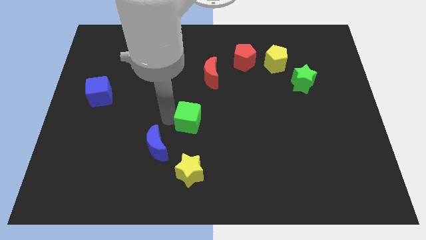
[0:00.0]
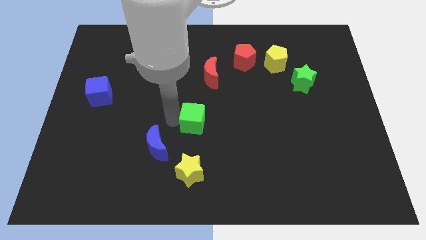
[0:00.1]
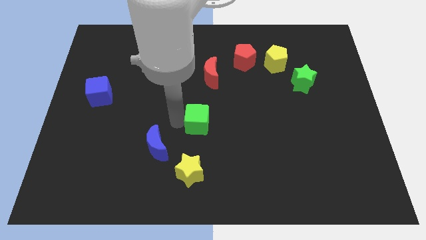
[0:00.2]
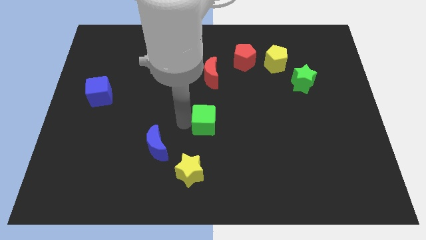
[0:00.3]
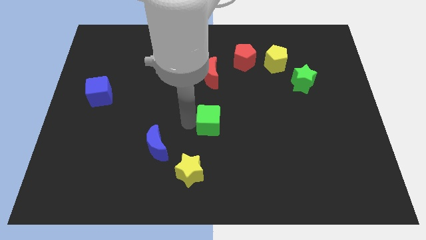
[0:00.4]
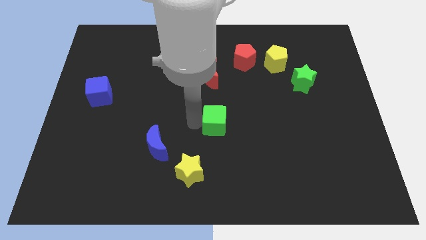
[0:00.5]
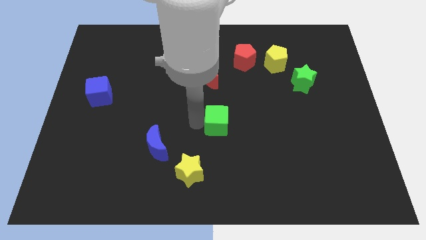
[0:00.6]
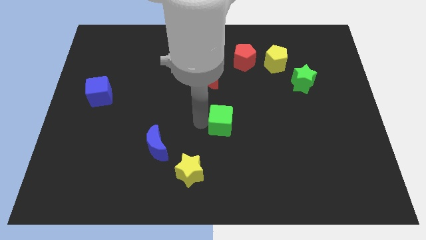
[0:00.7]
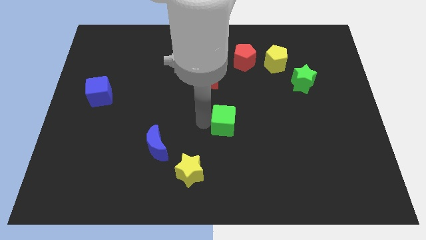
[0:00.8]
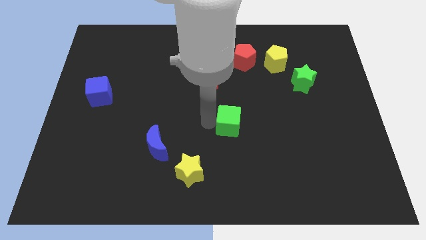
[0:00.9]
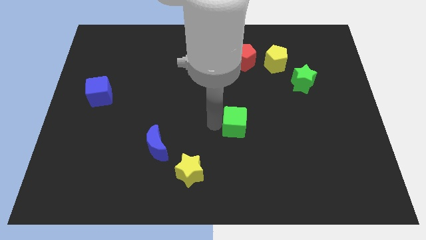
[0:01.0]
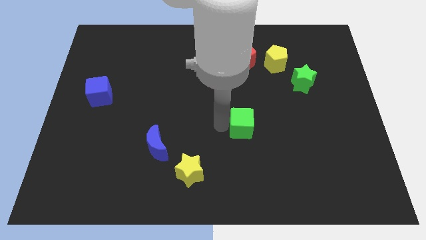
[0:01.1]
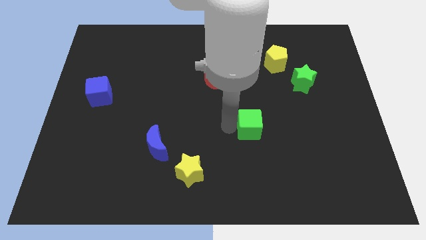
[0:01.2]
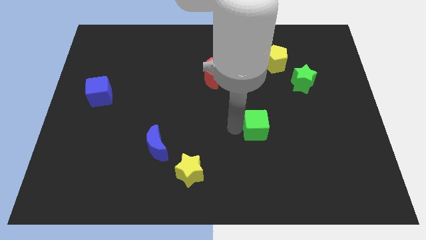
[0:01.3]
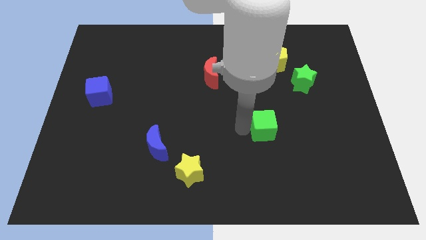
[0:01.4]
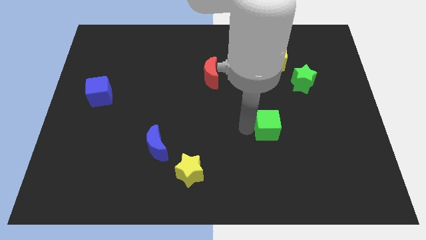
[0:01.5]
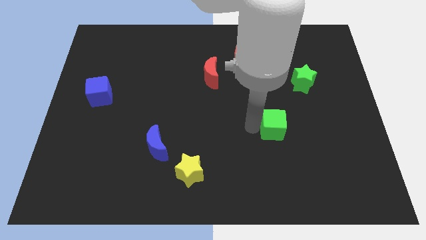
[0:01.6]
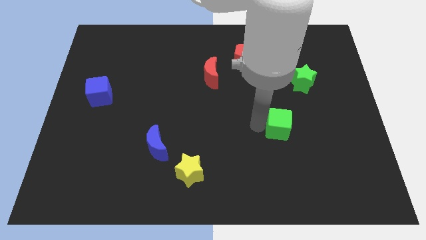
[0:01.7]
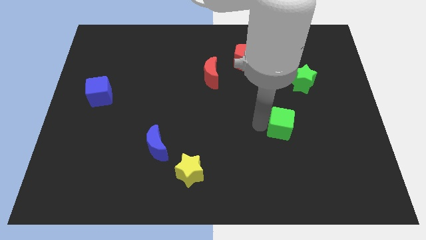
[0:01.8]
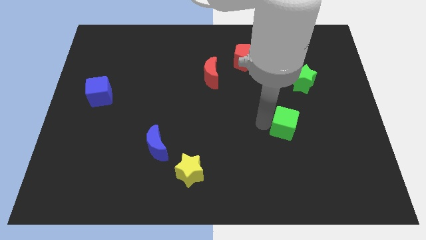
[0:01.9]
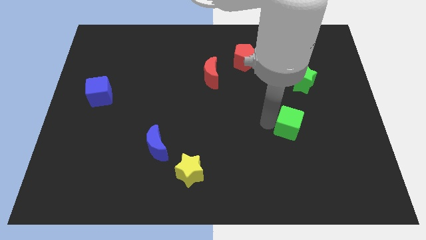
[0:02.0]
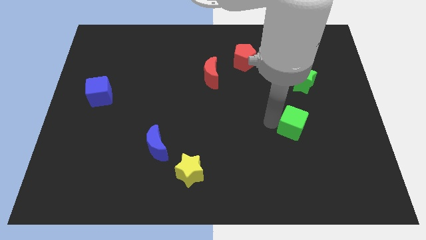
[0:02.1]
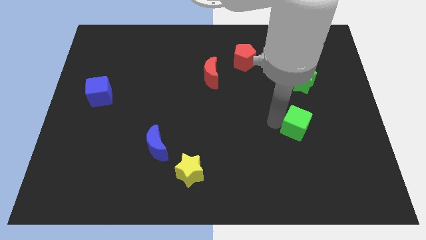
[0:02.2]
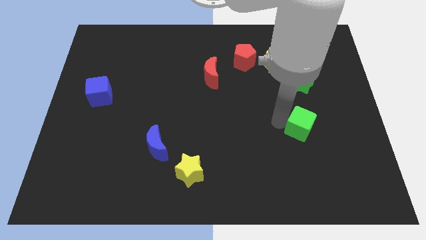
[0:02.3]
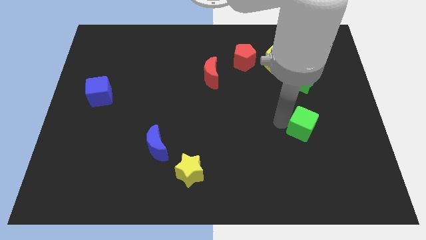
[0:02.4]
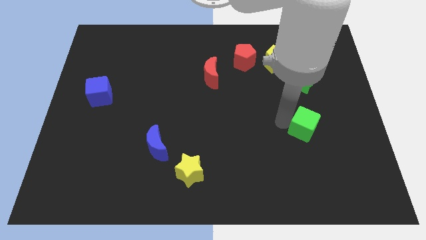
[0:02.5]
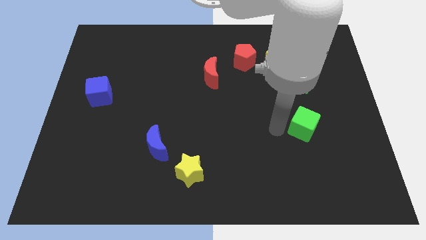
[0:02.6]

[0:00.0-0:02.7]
move the green cube to the bottom of the green star

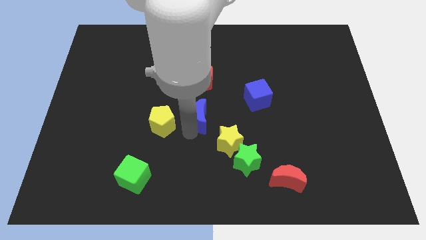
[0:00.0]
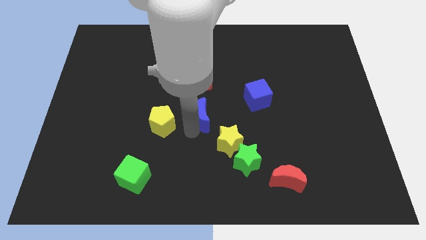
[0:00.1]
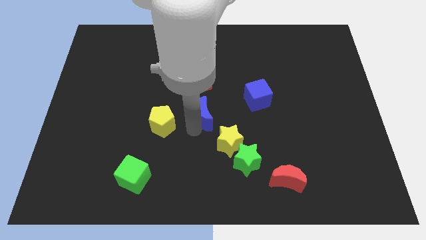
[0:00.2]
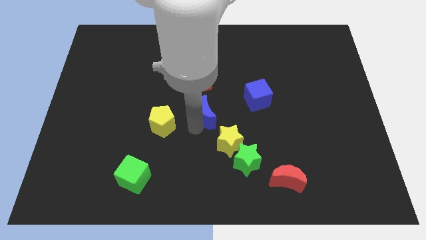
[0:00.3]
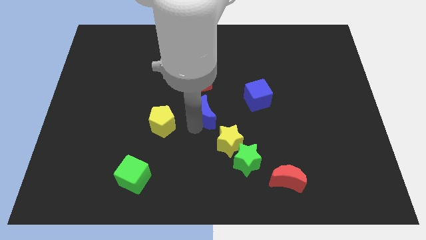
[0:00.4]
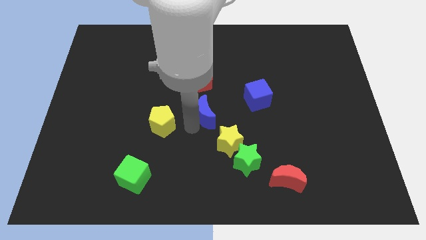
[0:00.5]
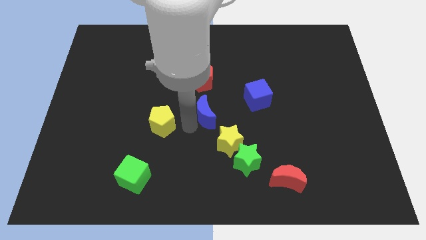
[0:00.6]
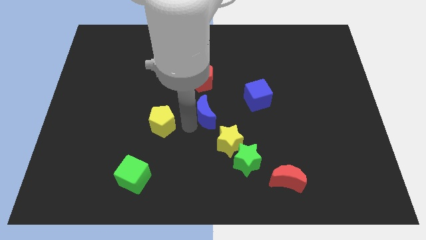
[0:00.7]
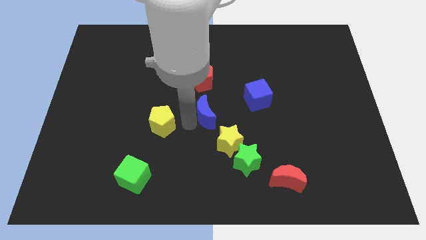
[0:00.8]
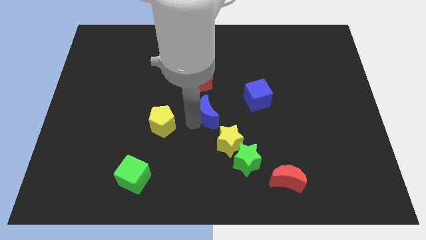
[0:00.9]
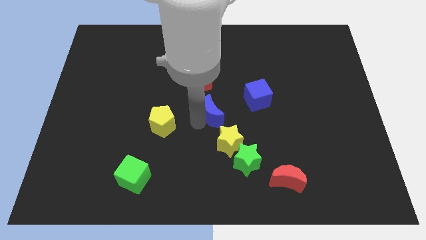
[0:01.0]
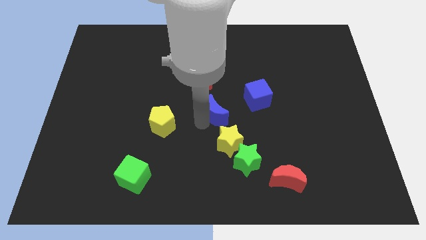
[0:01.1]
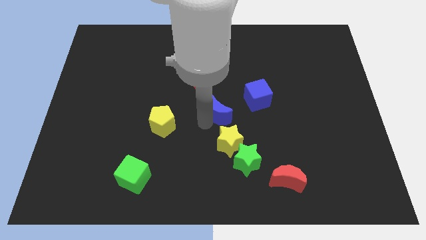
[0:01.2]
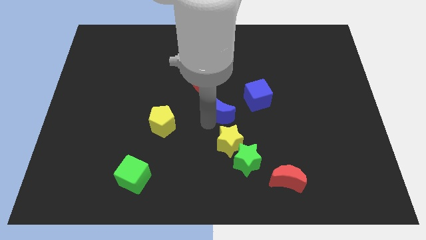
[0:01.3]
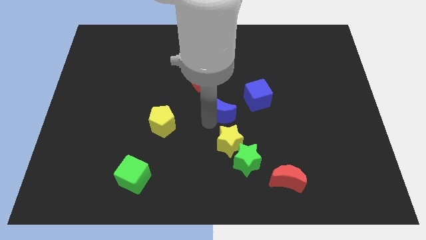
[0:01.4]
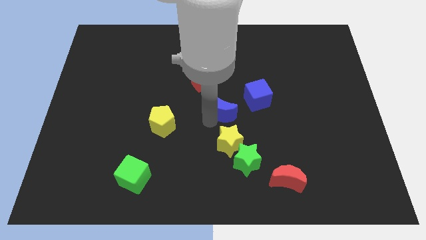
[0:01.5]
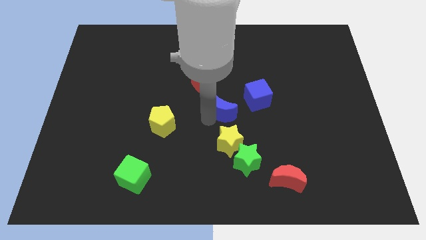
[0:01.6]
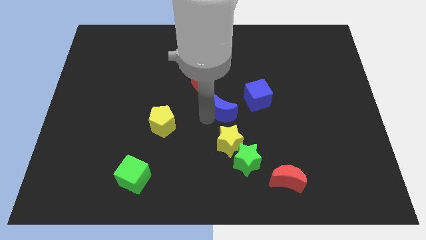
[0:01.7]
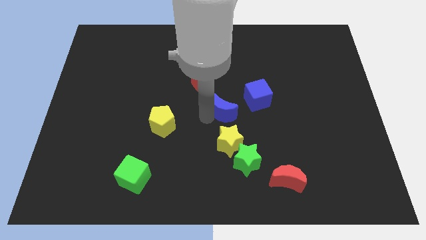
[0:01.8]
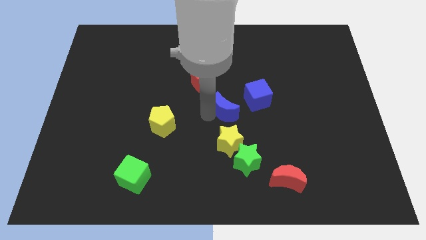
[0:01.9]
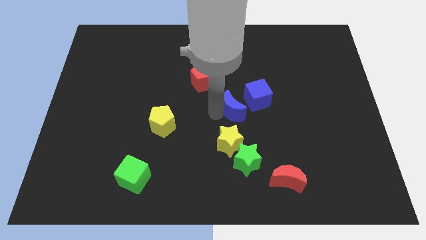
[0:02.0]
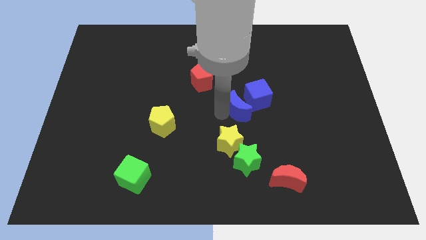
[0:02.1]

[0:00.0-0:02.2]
push the blue crescent near to the blue cube

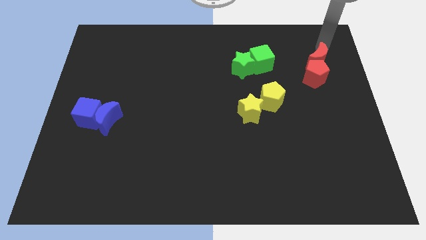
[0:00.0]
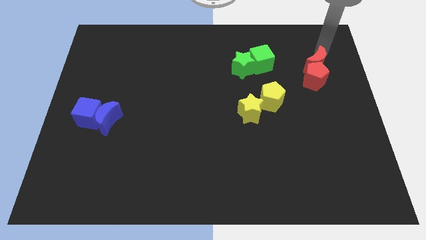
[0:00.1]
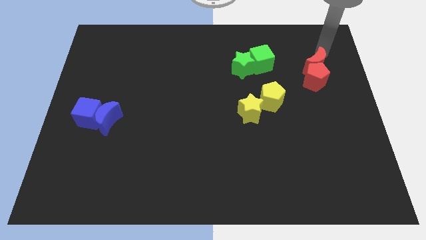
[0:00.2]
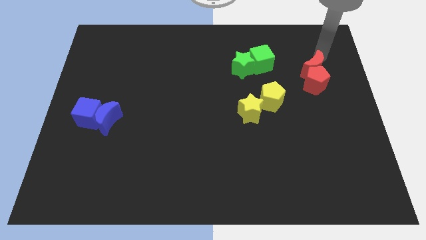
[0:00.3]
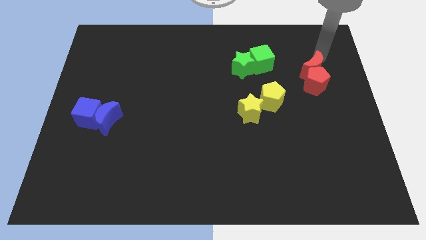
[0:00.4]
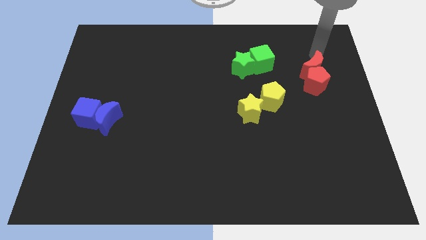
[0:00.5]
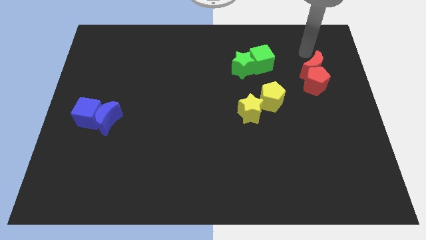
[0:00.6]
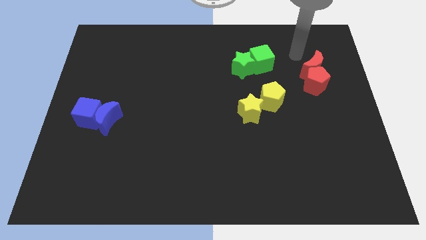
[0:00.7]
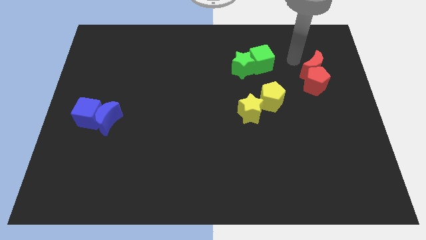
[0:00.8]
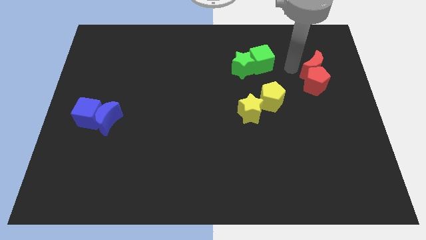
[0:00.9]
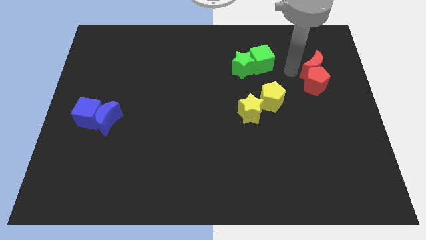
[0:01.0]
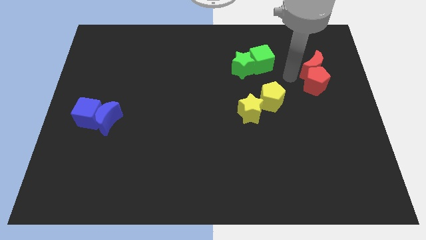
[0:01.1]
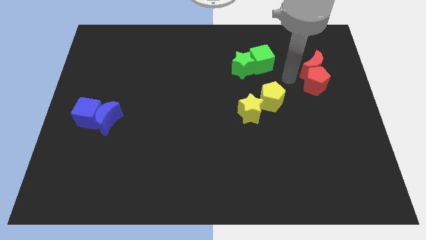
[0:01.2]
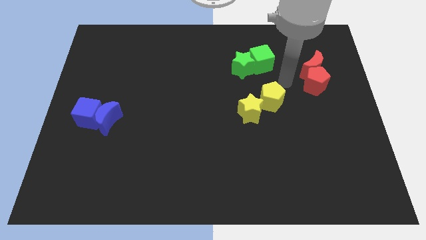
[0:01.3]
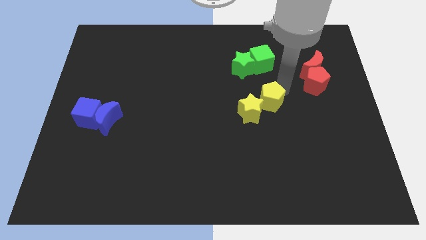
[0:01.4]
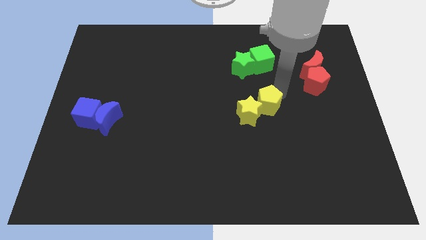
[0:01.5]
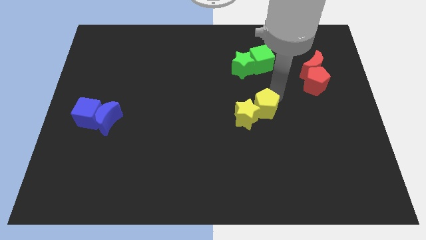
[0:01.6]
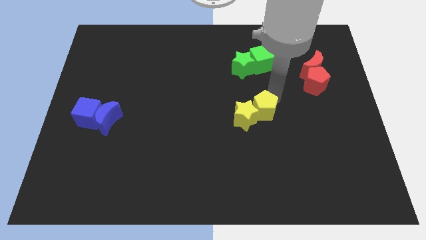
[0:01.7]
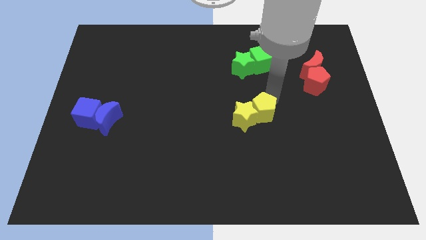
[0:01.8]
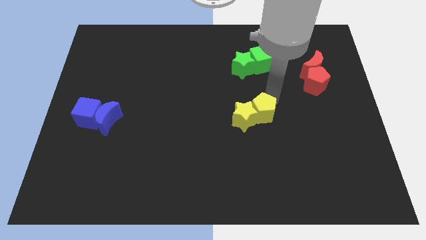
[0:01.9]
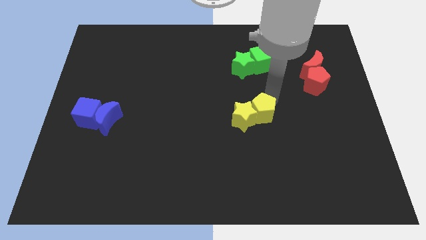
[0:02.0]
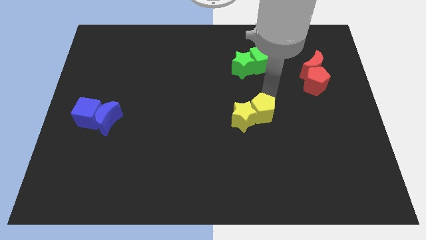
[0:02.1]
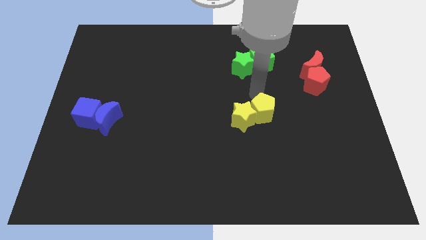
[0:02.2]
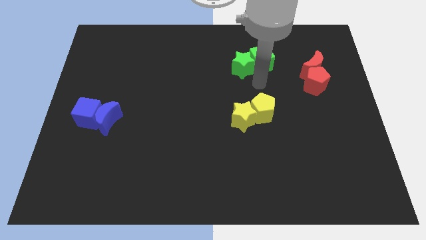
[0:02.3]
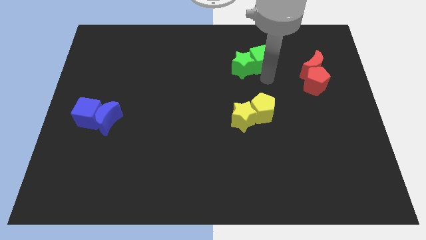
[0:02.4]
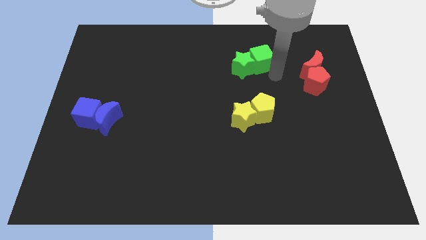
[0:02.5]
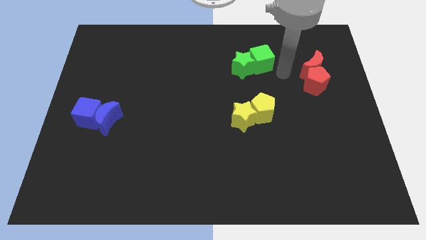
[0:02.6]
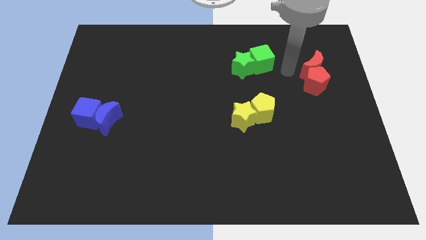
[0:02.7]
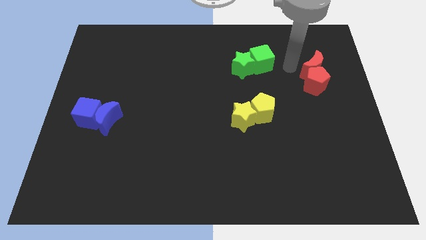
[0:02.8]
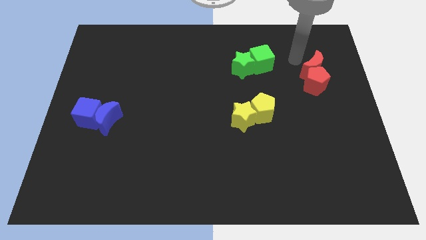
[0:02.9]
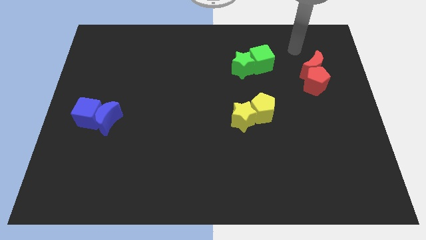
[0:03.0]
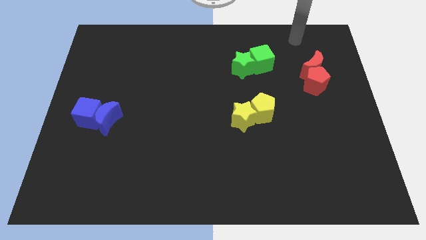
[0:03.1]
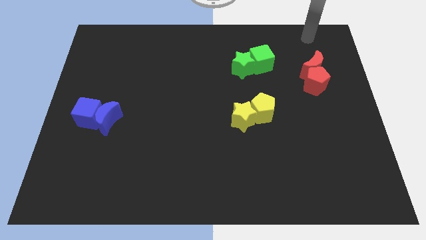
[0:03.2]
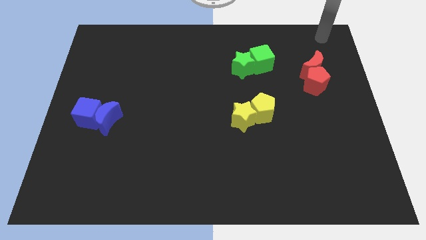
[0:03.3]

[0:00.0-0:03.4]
push the yellow star with the yellow pentagon to the center

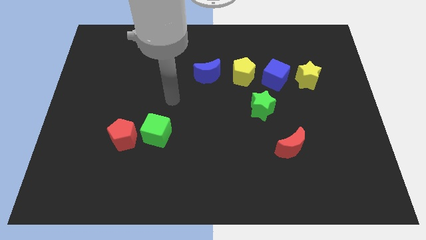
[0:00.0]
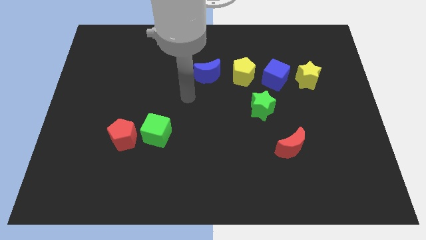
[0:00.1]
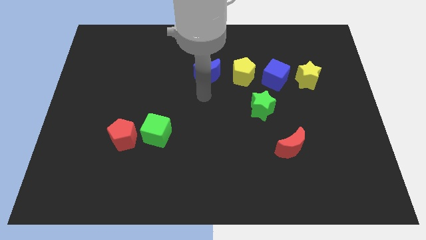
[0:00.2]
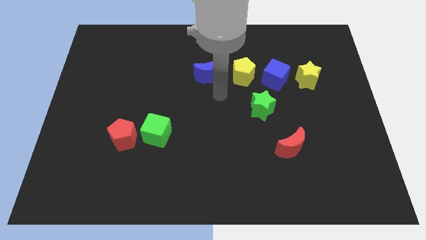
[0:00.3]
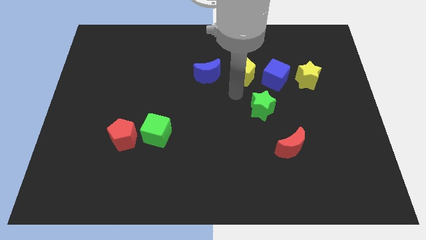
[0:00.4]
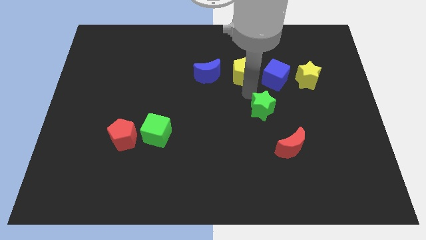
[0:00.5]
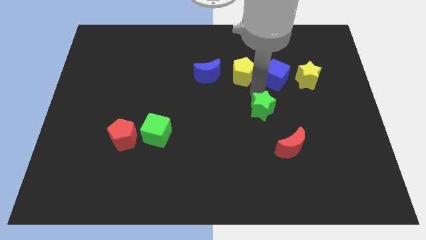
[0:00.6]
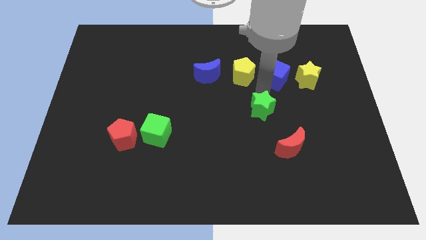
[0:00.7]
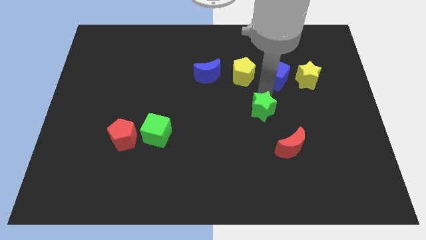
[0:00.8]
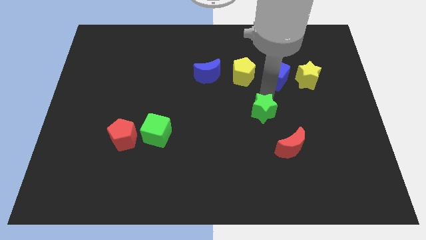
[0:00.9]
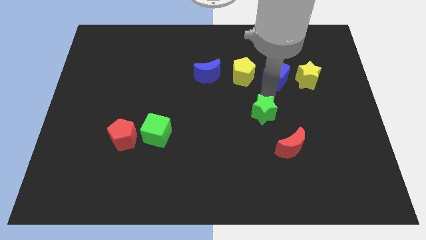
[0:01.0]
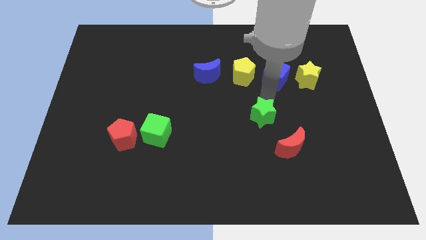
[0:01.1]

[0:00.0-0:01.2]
slightly move the green star to the bottom of the board
